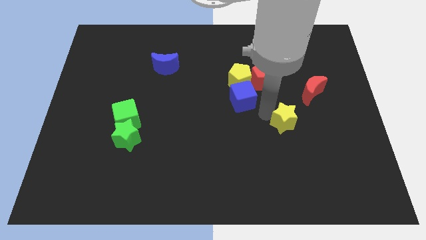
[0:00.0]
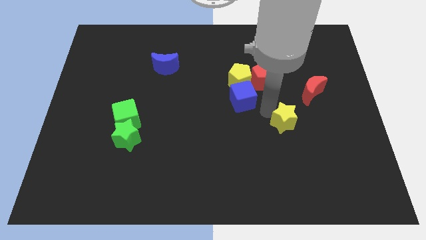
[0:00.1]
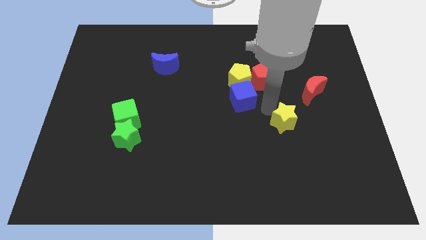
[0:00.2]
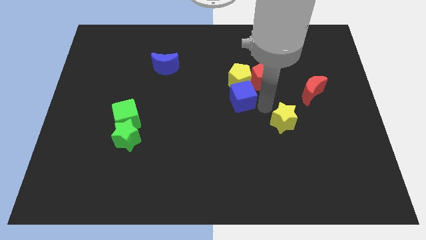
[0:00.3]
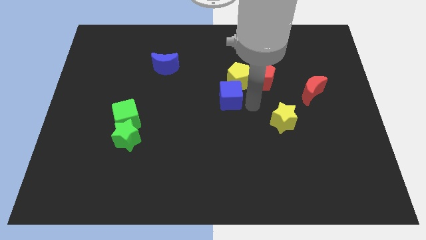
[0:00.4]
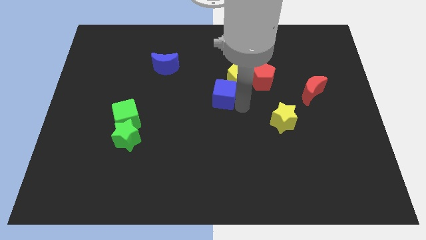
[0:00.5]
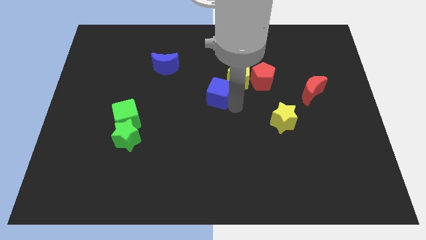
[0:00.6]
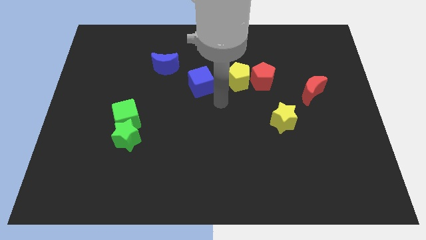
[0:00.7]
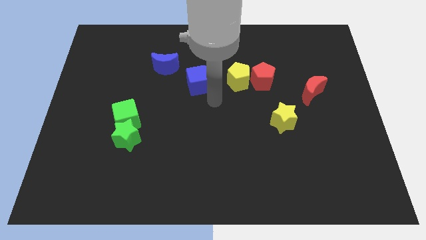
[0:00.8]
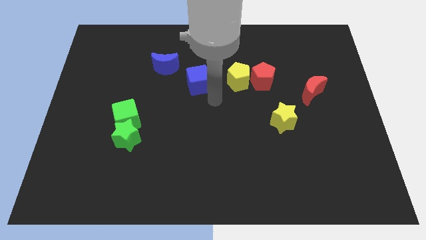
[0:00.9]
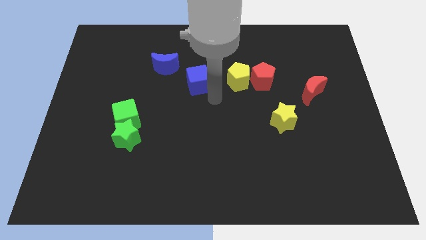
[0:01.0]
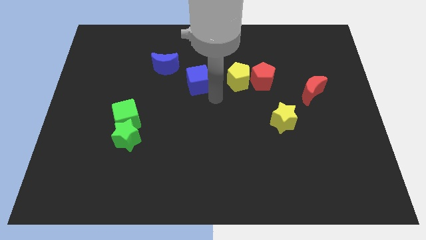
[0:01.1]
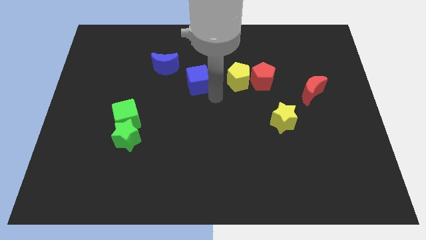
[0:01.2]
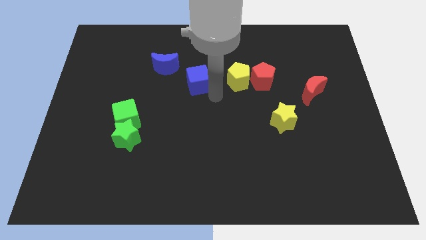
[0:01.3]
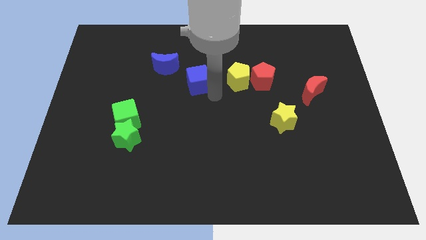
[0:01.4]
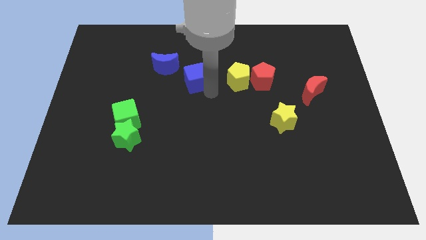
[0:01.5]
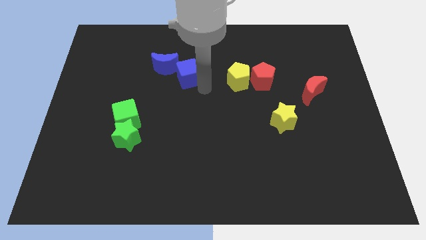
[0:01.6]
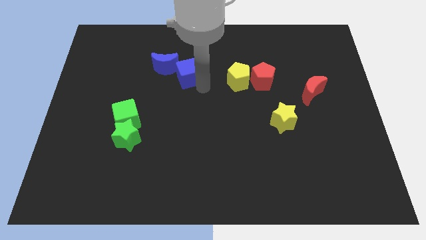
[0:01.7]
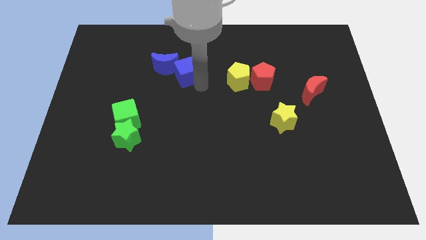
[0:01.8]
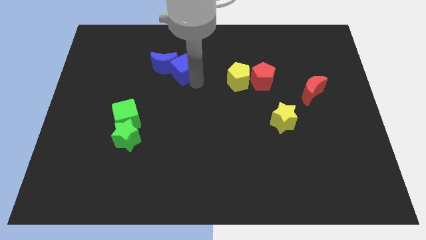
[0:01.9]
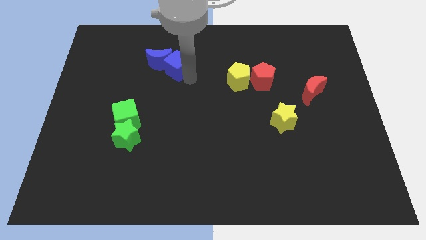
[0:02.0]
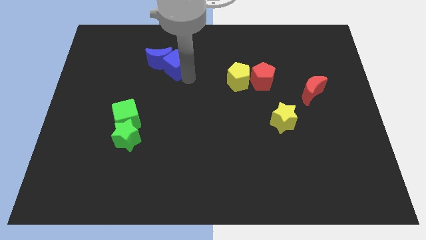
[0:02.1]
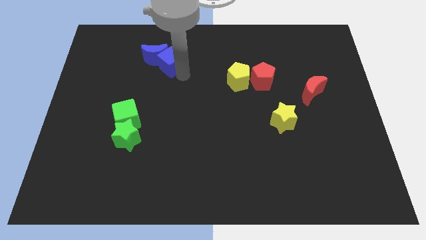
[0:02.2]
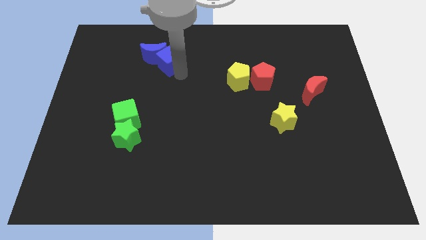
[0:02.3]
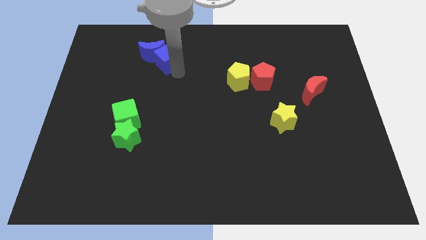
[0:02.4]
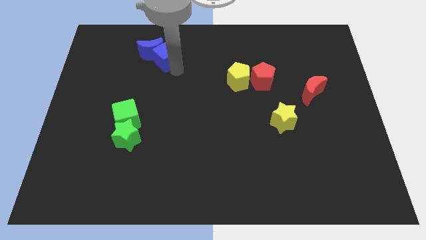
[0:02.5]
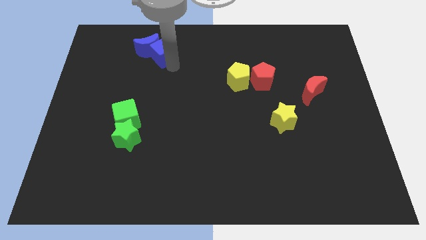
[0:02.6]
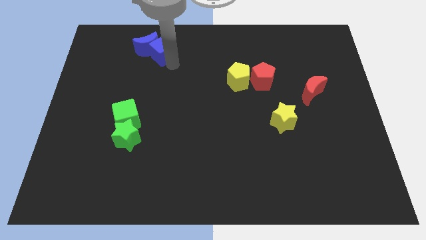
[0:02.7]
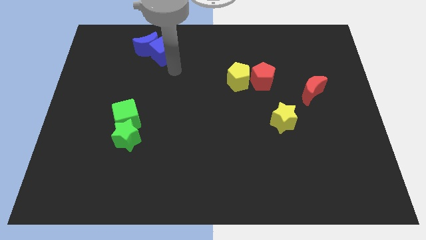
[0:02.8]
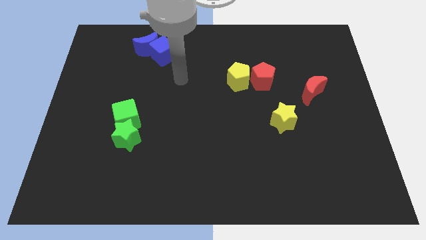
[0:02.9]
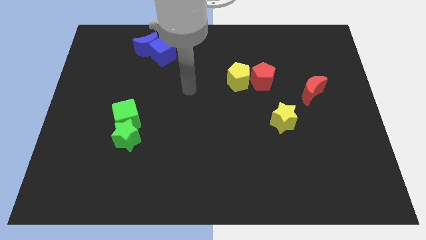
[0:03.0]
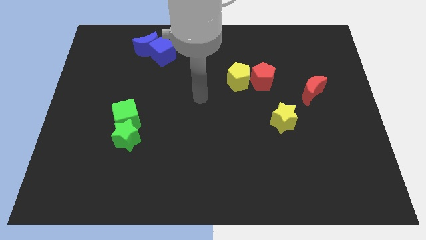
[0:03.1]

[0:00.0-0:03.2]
push the blue blocks slightly upwards

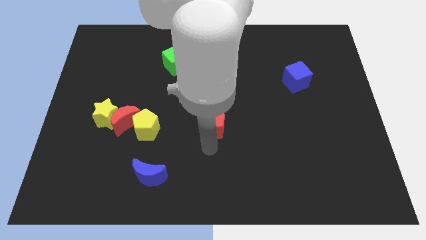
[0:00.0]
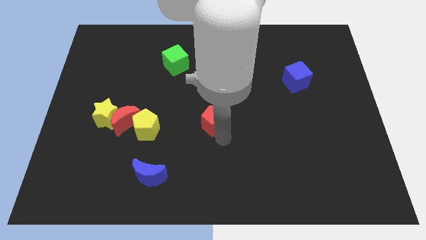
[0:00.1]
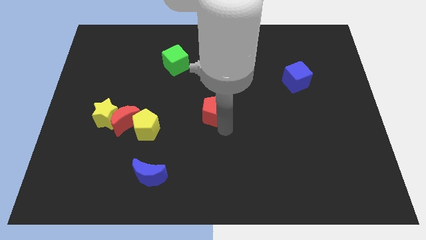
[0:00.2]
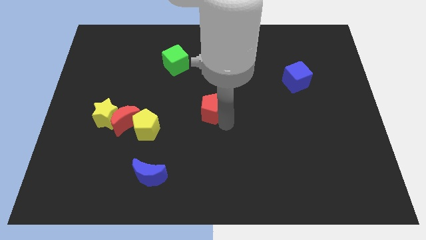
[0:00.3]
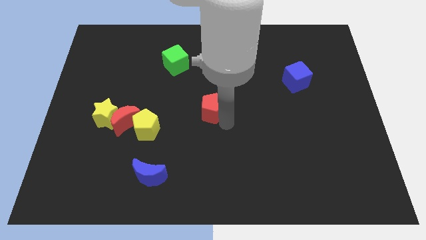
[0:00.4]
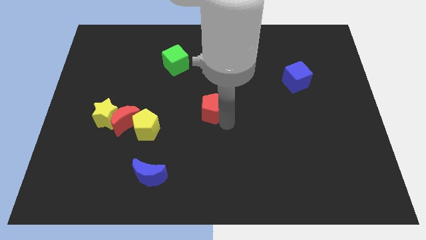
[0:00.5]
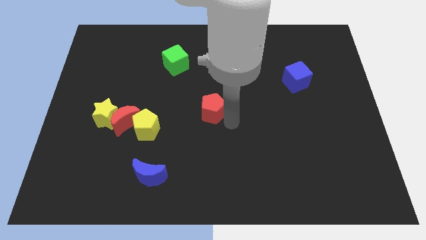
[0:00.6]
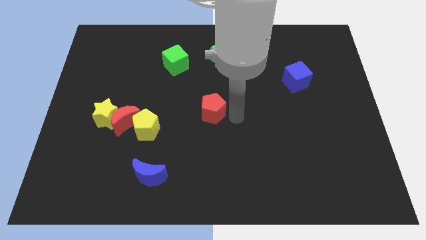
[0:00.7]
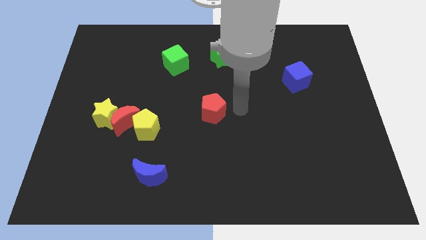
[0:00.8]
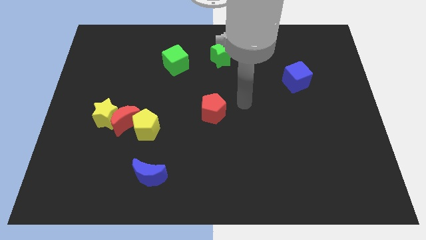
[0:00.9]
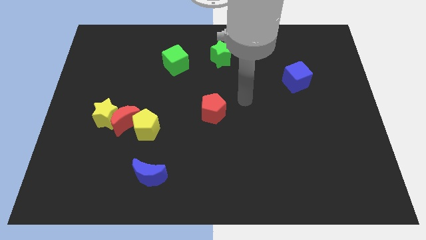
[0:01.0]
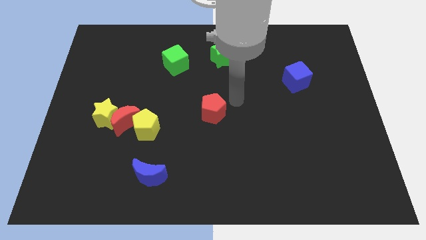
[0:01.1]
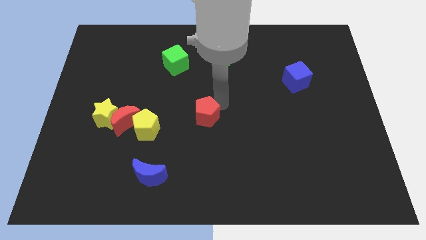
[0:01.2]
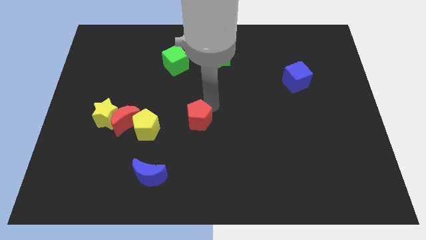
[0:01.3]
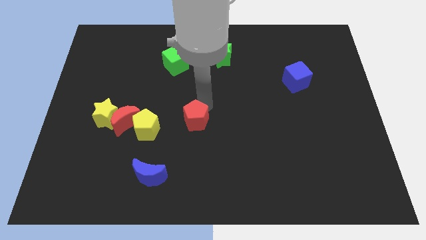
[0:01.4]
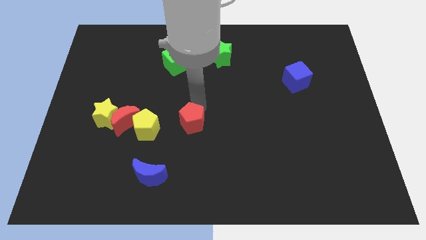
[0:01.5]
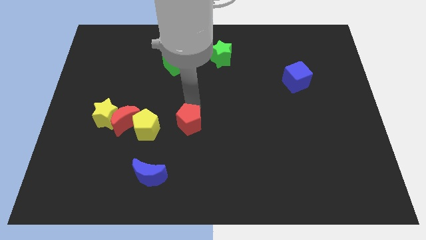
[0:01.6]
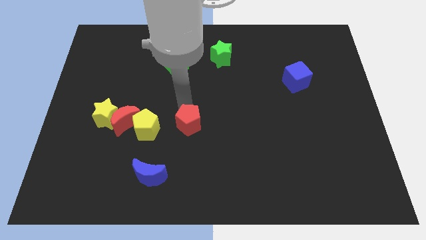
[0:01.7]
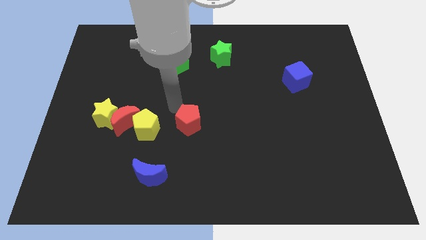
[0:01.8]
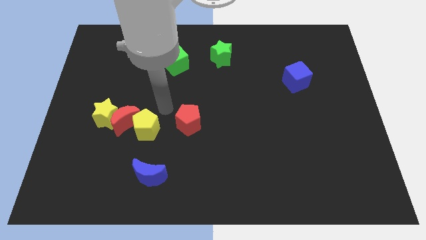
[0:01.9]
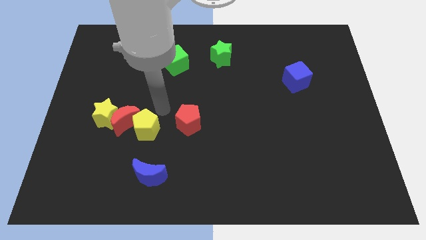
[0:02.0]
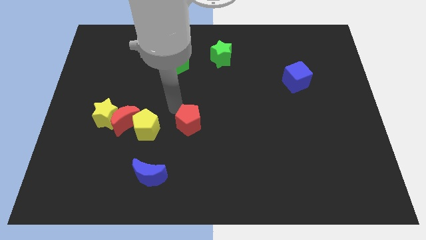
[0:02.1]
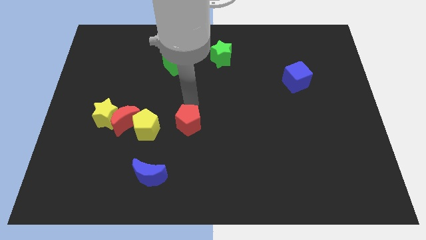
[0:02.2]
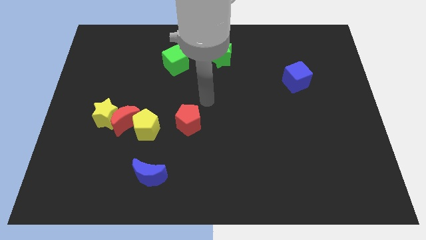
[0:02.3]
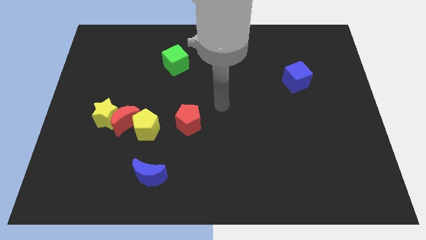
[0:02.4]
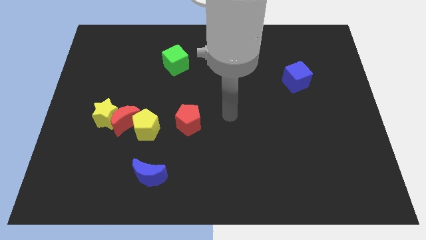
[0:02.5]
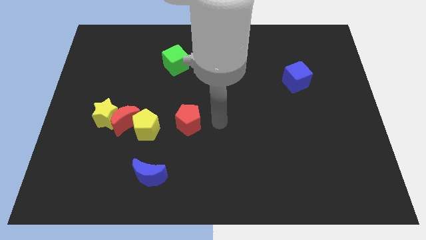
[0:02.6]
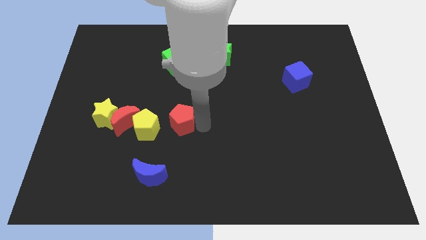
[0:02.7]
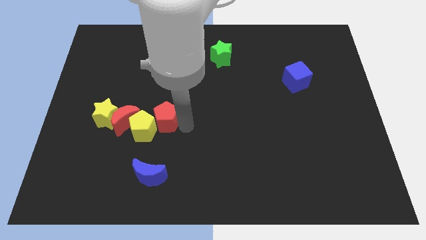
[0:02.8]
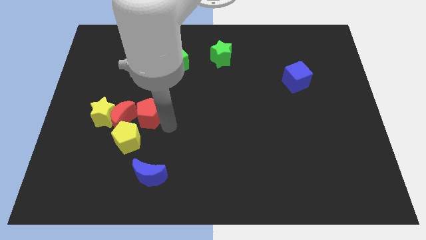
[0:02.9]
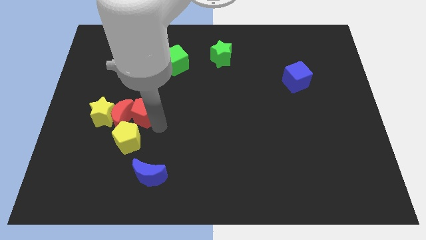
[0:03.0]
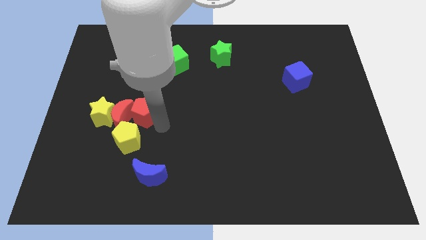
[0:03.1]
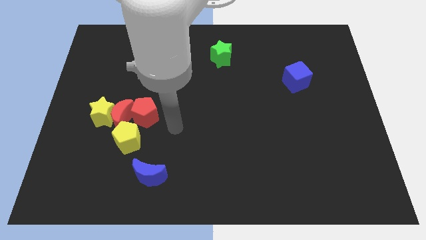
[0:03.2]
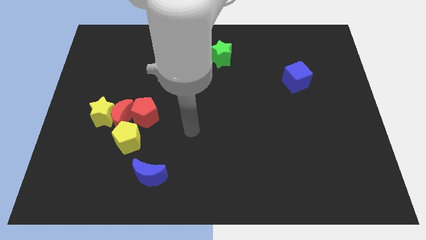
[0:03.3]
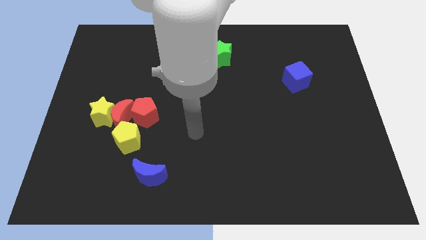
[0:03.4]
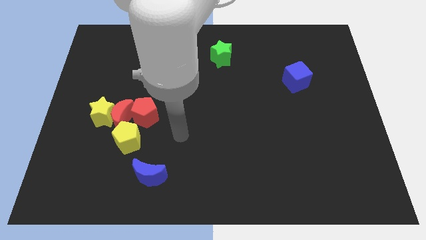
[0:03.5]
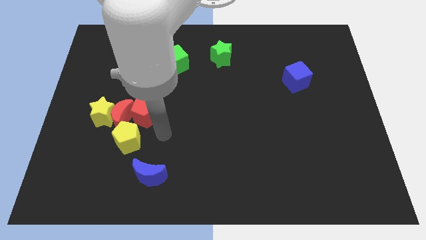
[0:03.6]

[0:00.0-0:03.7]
push red pentagon into red moon

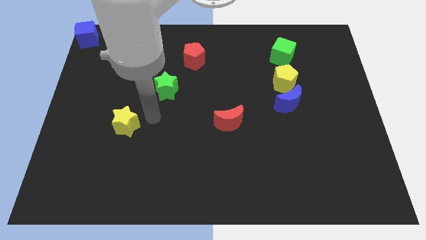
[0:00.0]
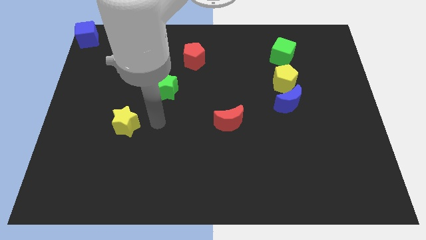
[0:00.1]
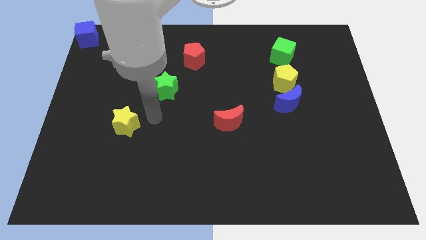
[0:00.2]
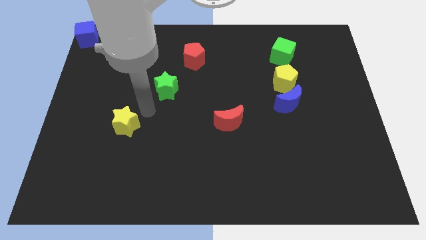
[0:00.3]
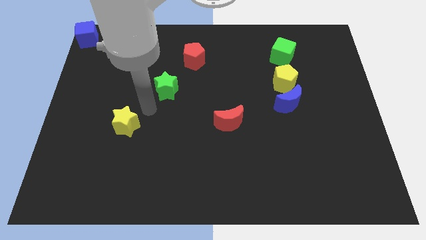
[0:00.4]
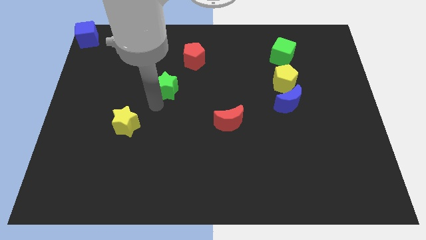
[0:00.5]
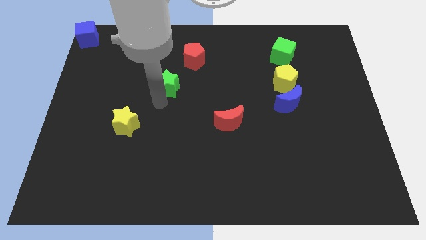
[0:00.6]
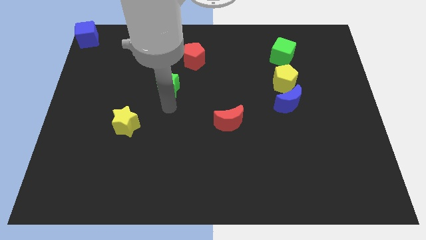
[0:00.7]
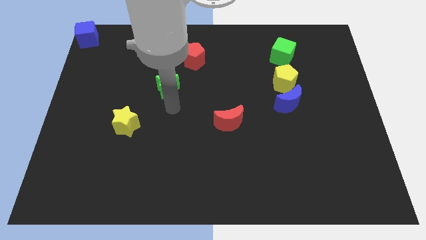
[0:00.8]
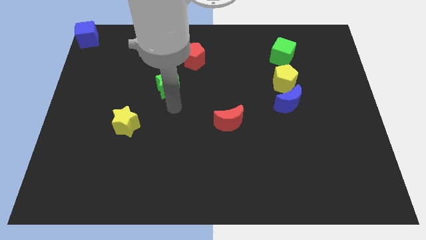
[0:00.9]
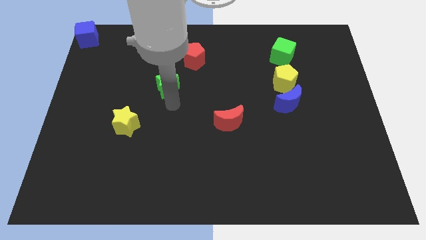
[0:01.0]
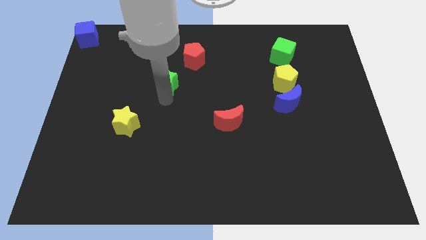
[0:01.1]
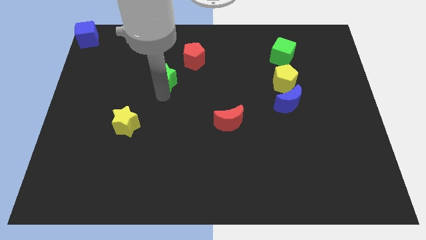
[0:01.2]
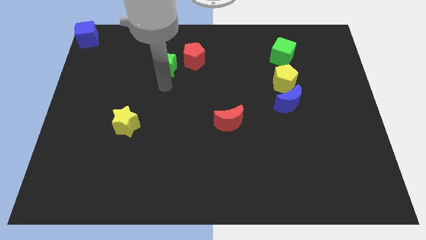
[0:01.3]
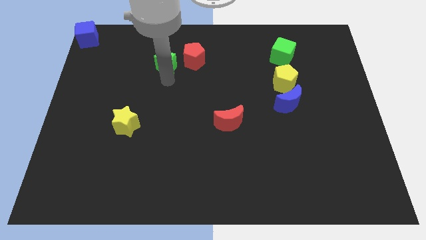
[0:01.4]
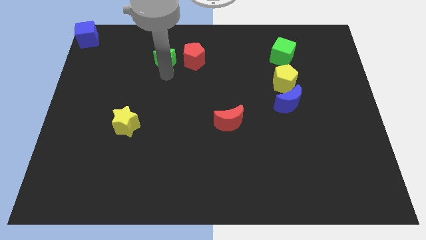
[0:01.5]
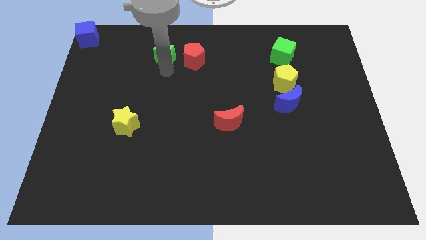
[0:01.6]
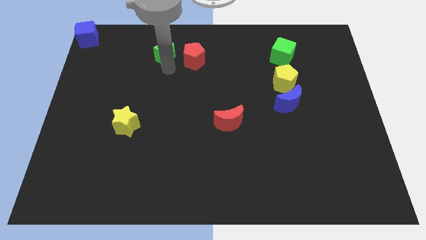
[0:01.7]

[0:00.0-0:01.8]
slide the green star to the left side of the red pentagon

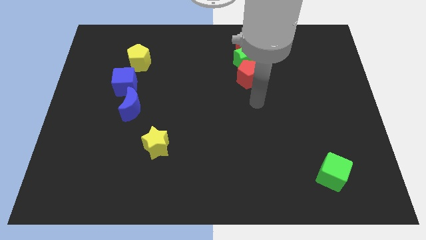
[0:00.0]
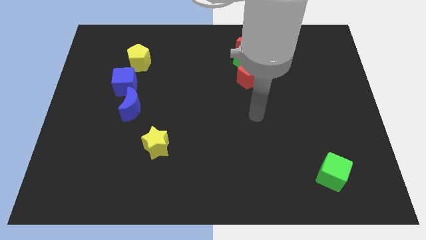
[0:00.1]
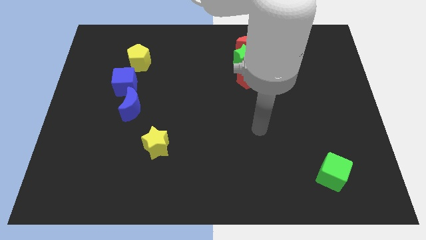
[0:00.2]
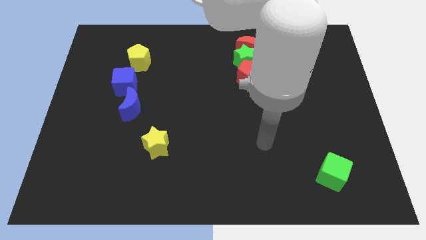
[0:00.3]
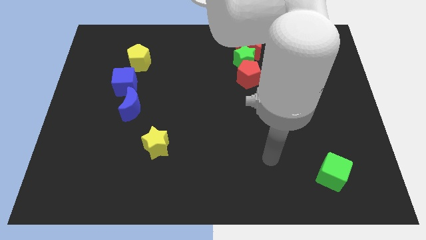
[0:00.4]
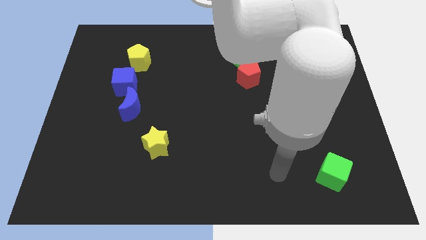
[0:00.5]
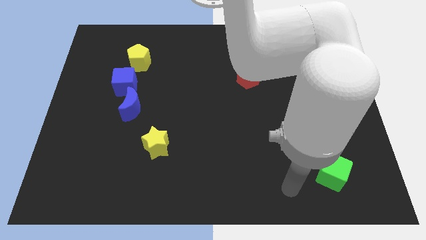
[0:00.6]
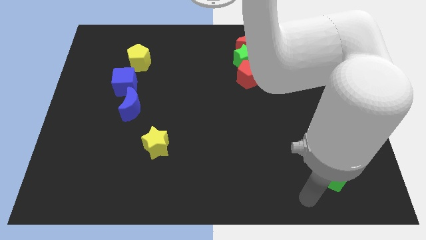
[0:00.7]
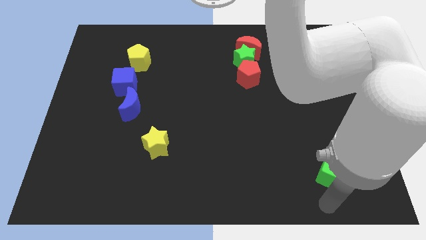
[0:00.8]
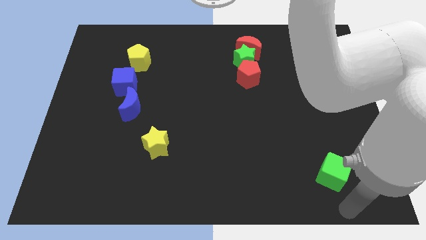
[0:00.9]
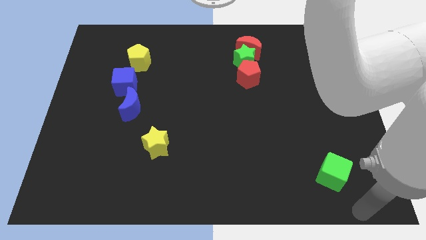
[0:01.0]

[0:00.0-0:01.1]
move your hand away from red pentagon
